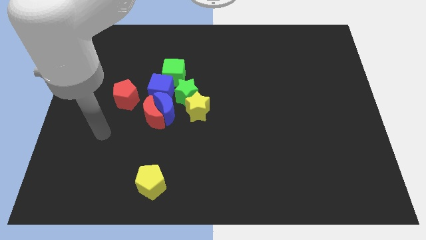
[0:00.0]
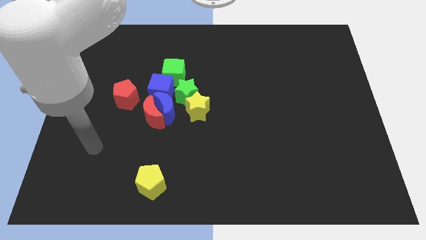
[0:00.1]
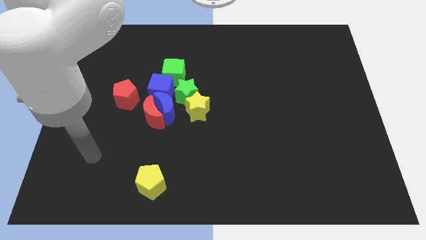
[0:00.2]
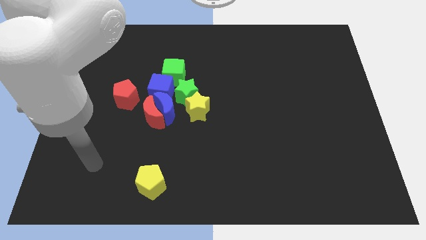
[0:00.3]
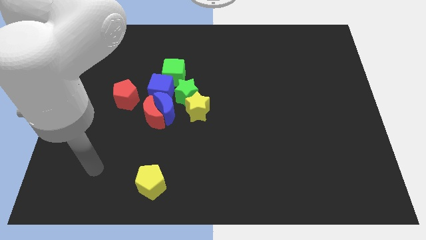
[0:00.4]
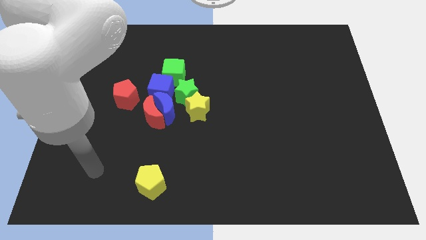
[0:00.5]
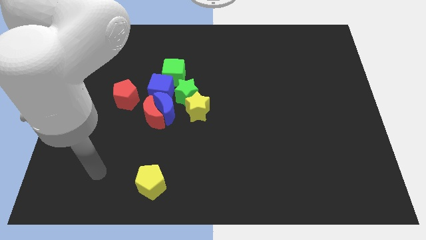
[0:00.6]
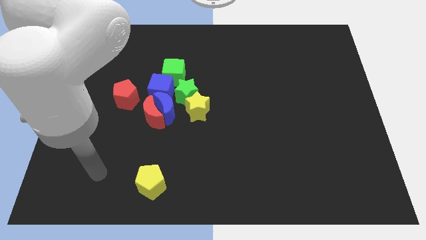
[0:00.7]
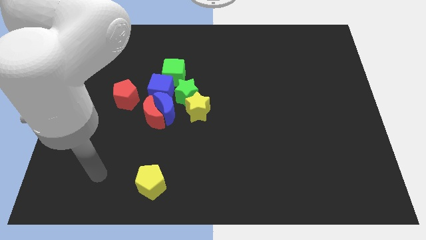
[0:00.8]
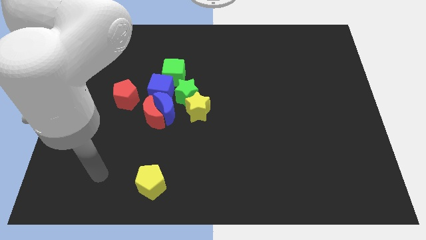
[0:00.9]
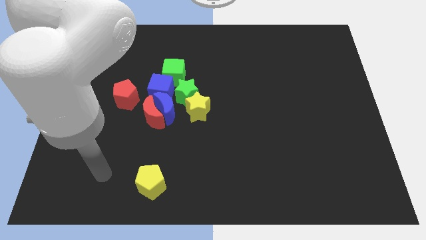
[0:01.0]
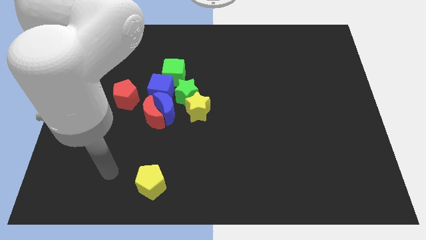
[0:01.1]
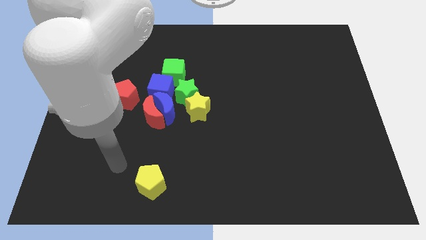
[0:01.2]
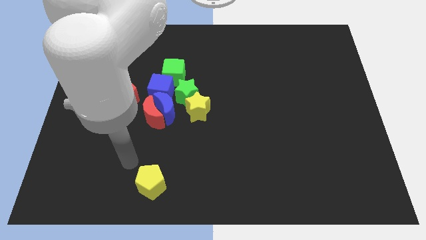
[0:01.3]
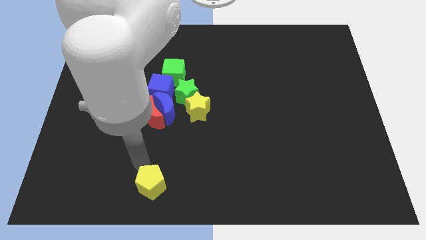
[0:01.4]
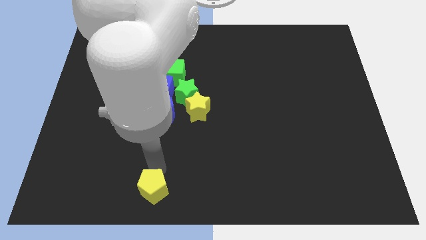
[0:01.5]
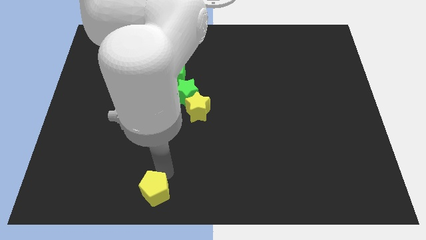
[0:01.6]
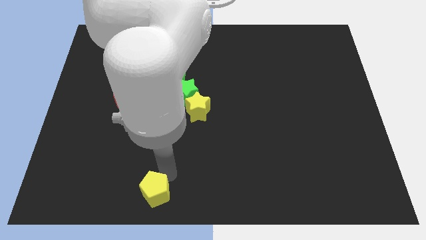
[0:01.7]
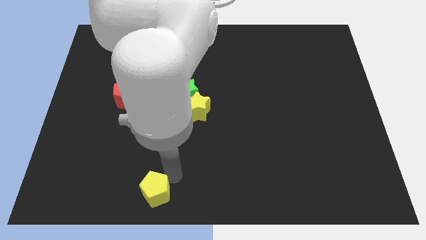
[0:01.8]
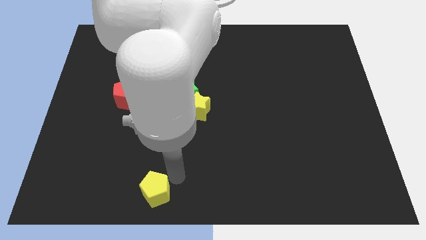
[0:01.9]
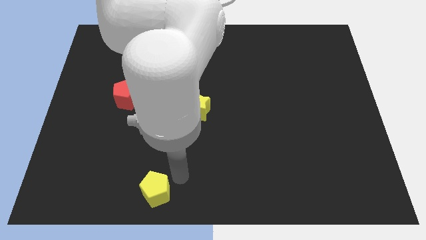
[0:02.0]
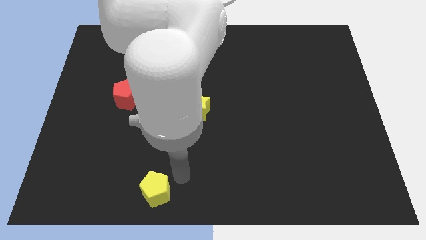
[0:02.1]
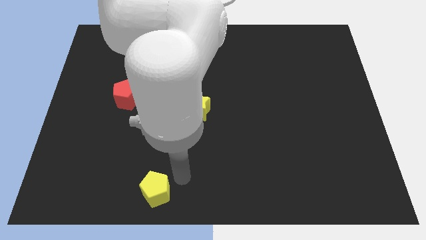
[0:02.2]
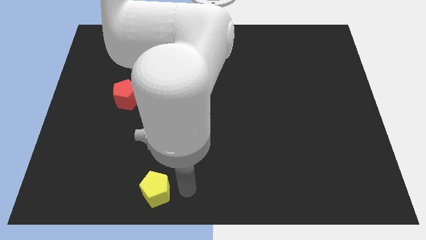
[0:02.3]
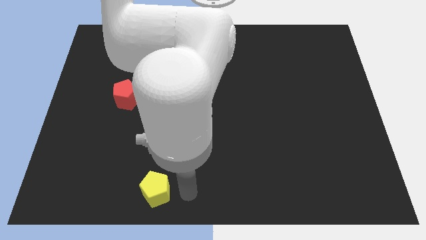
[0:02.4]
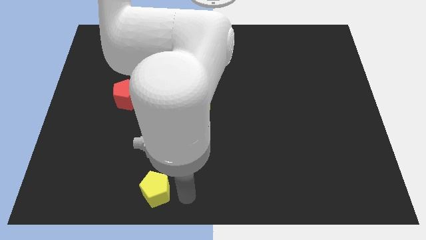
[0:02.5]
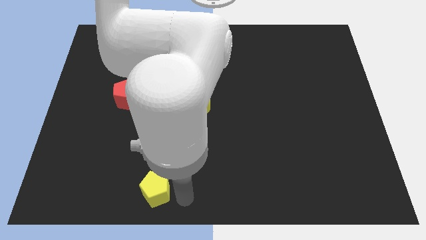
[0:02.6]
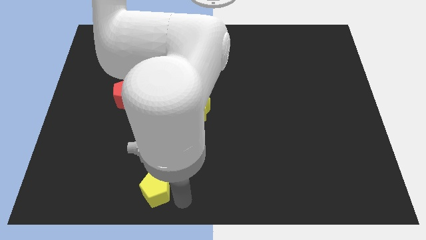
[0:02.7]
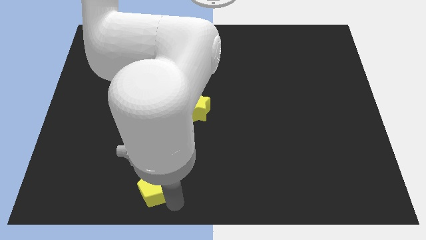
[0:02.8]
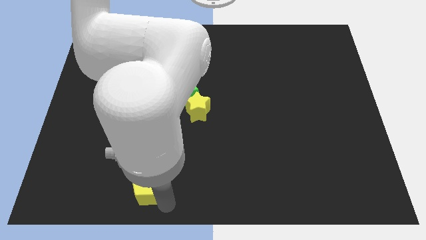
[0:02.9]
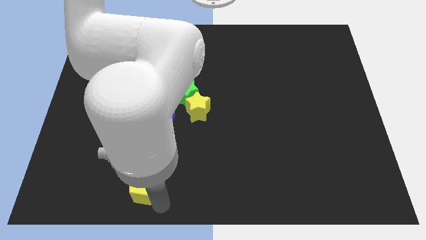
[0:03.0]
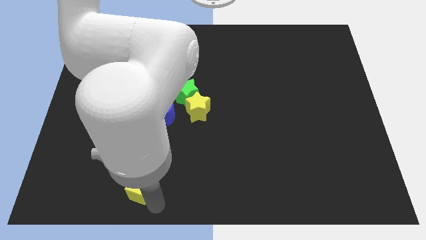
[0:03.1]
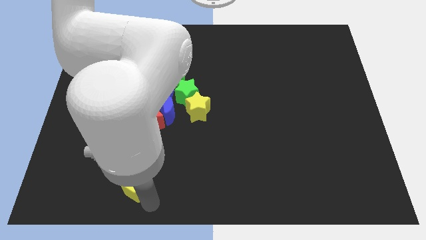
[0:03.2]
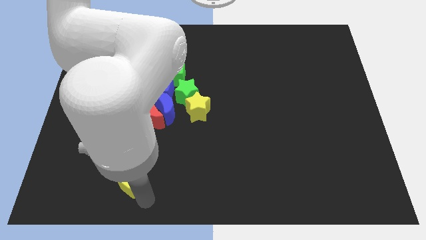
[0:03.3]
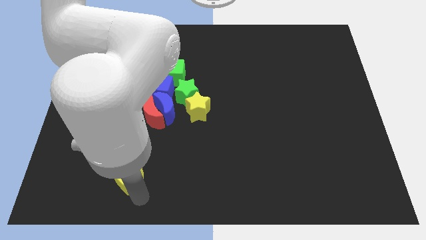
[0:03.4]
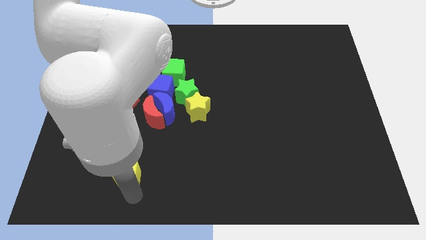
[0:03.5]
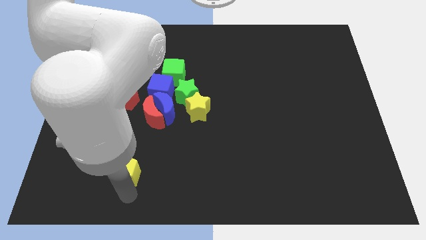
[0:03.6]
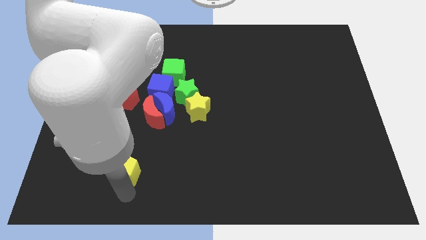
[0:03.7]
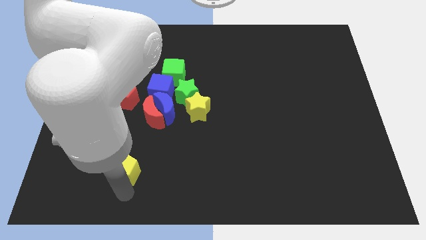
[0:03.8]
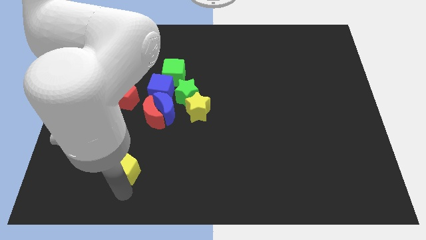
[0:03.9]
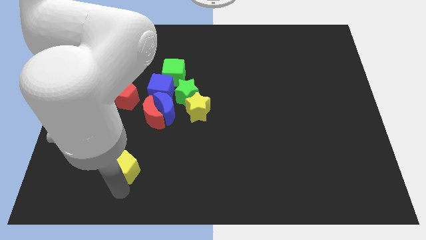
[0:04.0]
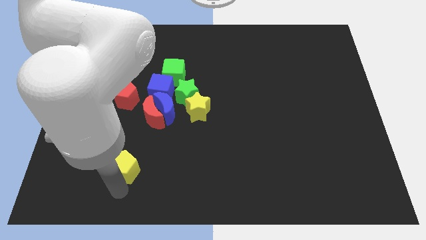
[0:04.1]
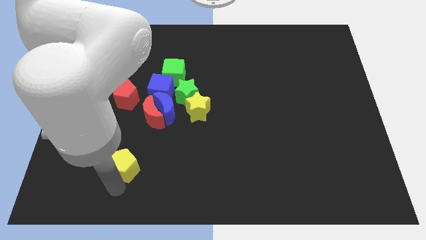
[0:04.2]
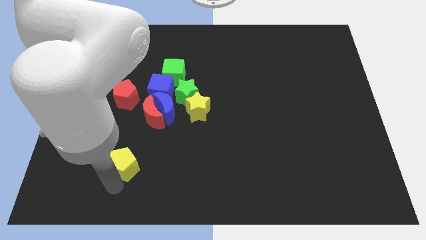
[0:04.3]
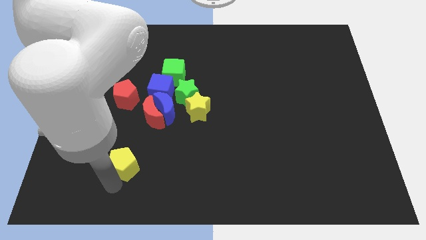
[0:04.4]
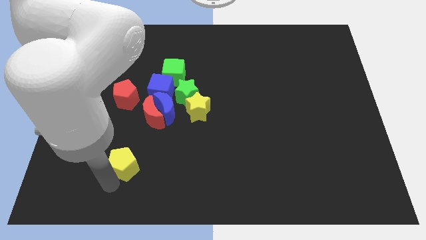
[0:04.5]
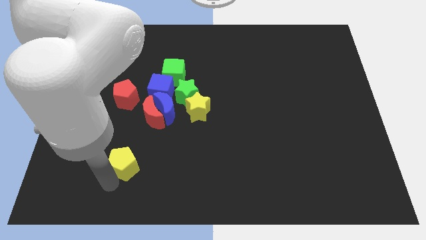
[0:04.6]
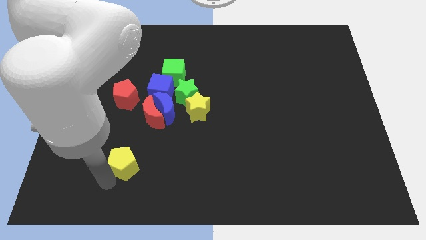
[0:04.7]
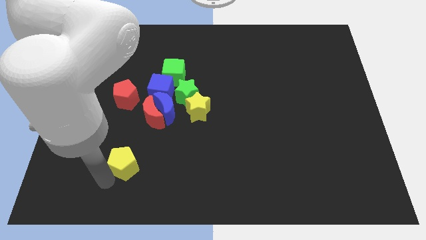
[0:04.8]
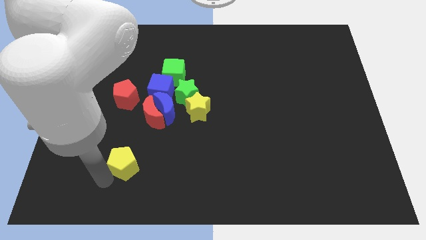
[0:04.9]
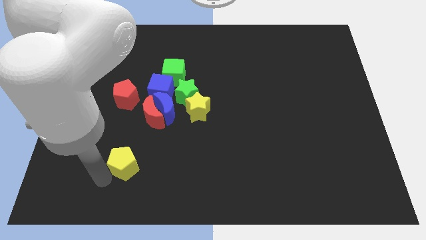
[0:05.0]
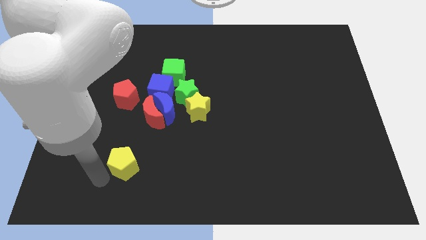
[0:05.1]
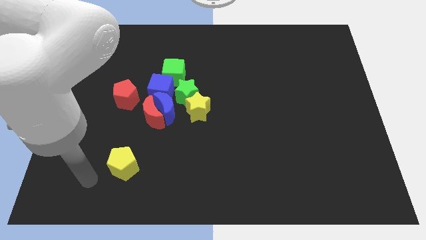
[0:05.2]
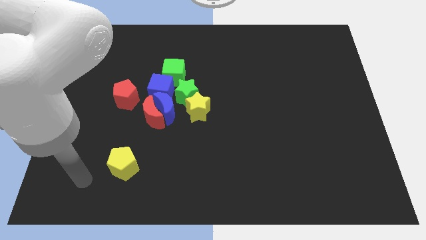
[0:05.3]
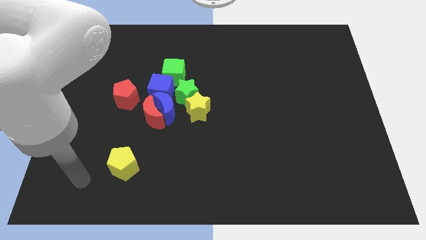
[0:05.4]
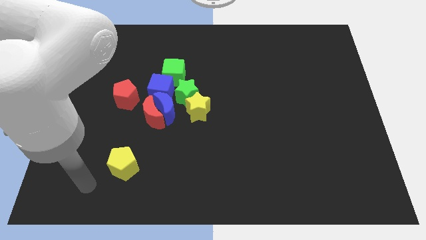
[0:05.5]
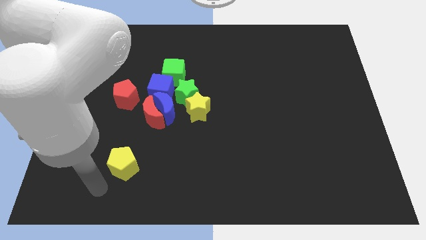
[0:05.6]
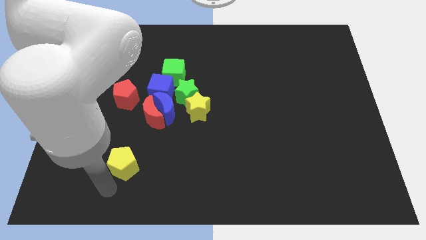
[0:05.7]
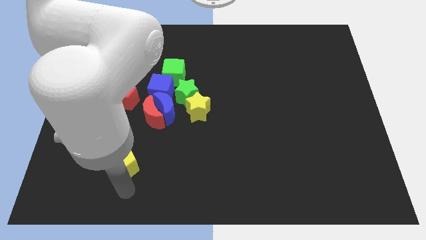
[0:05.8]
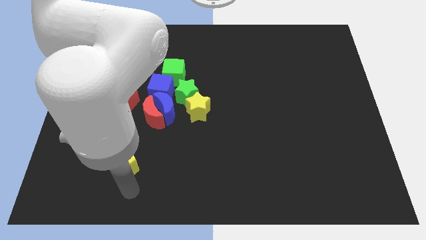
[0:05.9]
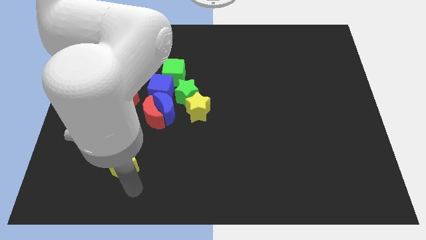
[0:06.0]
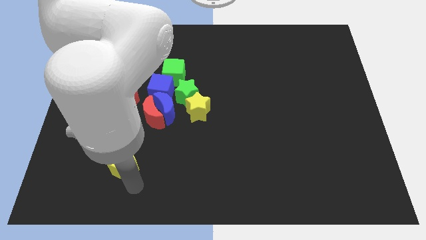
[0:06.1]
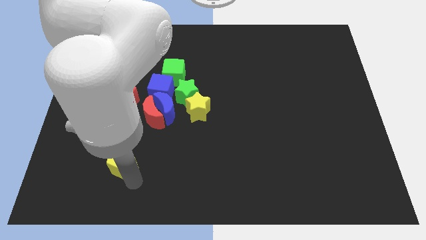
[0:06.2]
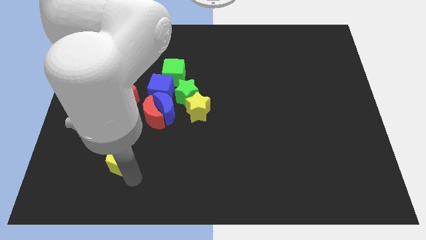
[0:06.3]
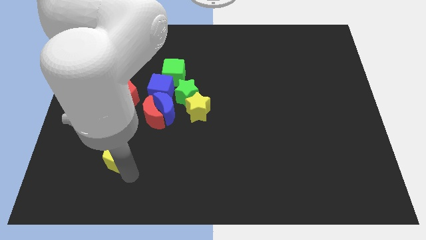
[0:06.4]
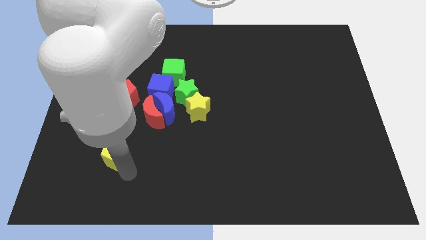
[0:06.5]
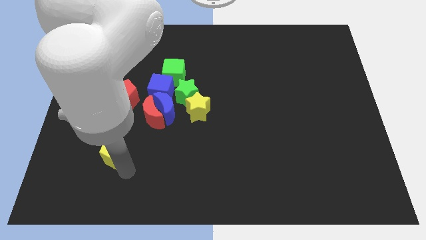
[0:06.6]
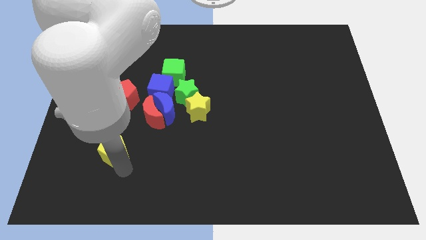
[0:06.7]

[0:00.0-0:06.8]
move the yellow pentagon slightly up

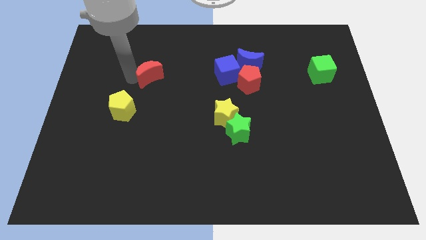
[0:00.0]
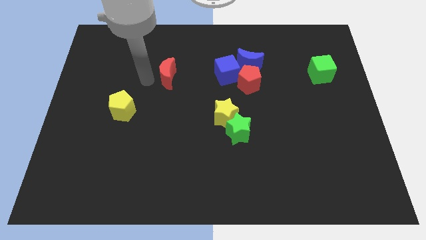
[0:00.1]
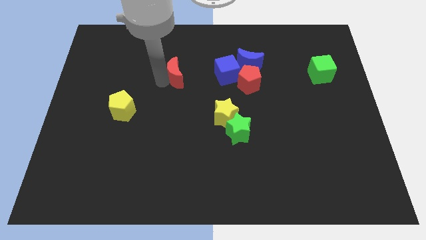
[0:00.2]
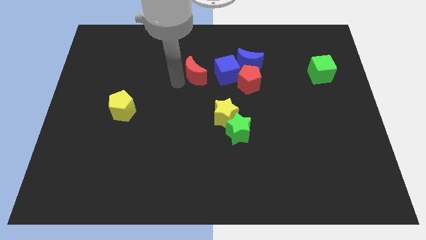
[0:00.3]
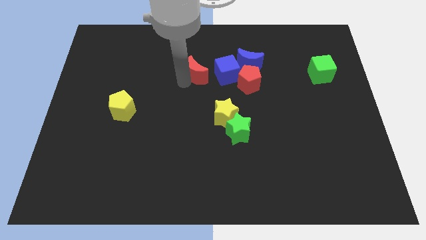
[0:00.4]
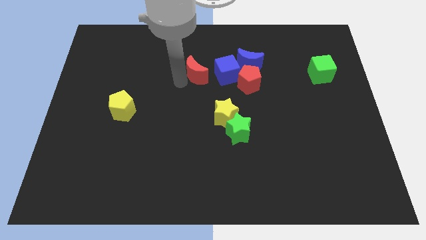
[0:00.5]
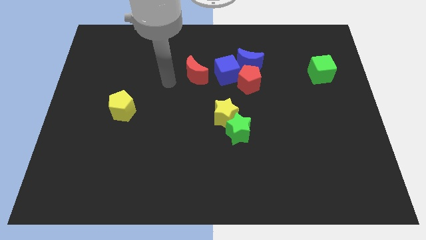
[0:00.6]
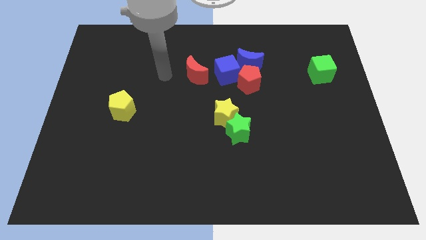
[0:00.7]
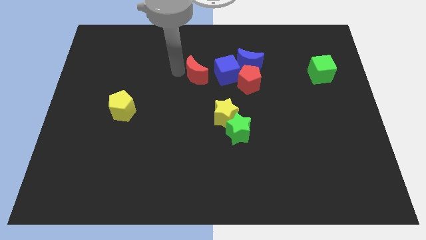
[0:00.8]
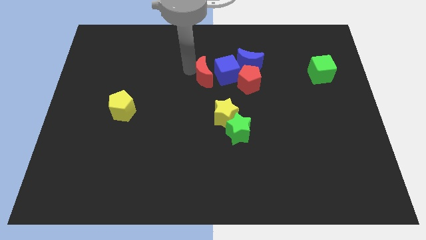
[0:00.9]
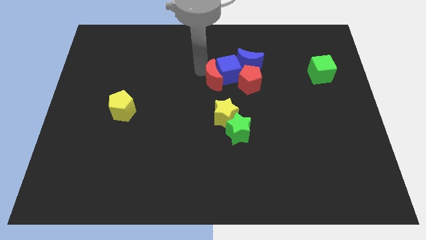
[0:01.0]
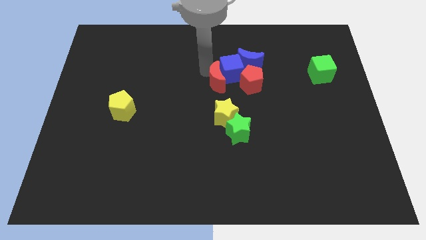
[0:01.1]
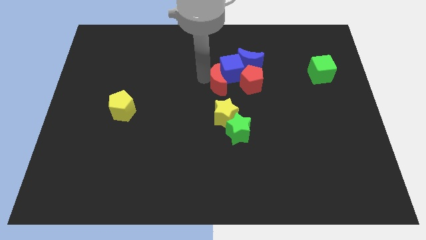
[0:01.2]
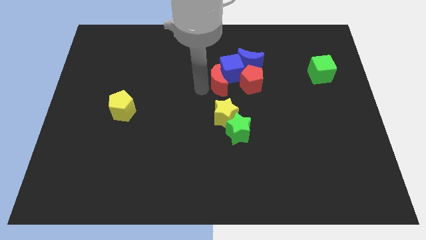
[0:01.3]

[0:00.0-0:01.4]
place red crescent above yellow star

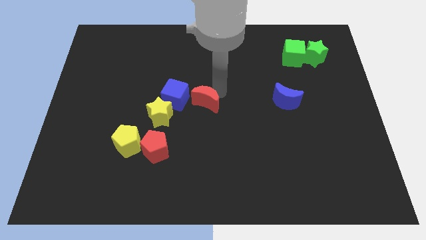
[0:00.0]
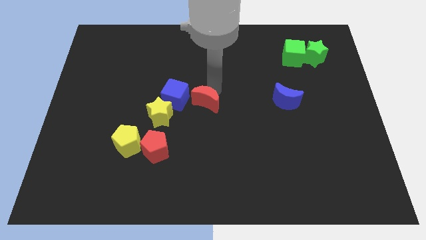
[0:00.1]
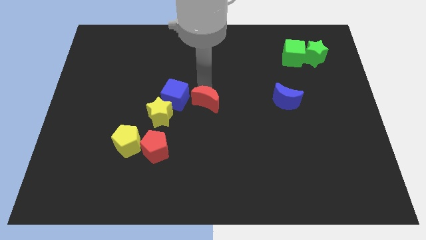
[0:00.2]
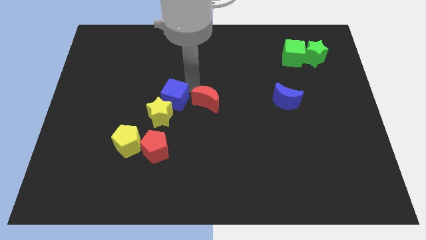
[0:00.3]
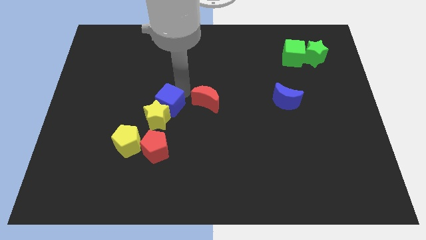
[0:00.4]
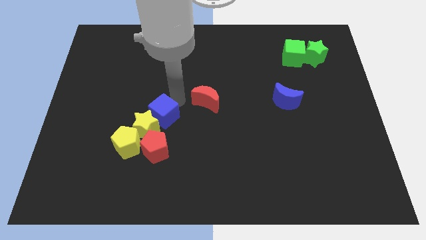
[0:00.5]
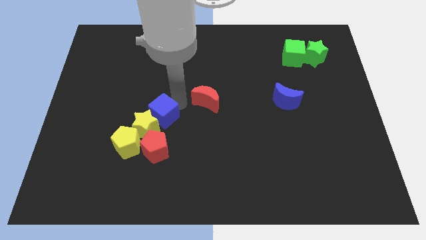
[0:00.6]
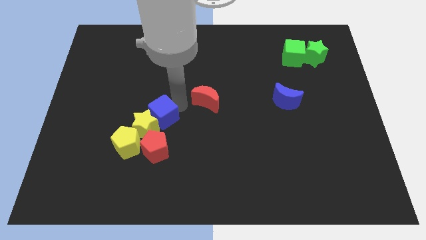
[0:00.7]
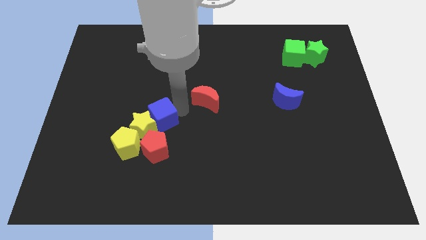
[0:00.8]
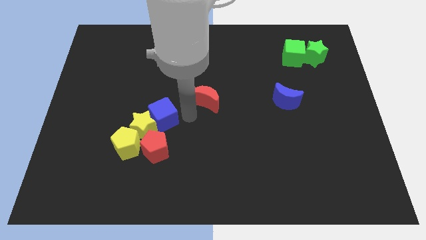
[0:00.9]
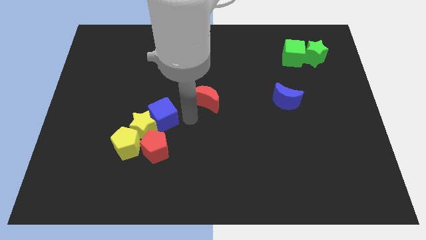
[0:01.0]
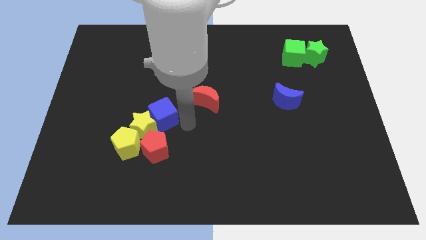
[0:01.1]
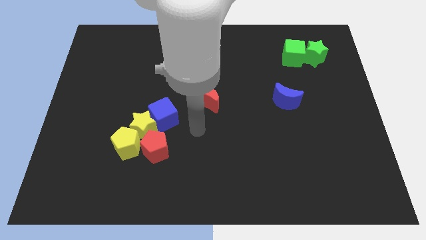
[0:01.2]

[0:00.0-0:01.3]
push the yellow star into the yellow pentagon
